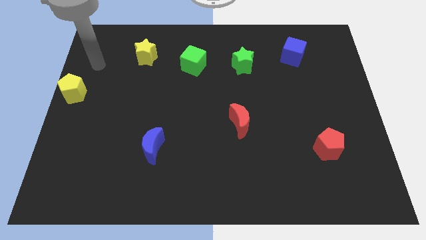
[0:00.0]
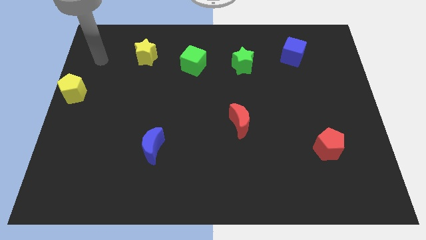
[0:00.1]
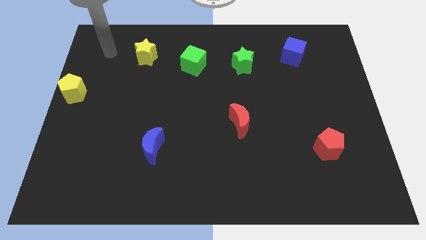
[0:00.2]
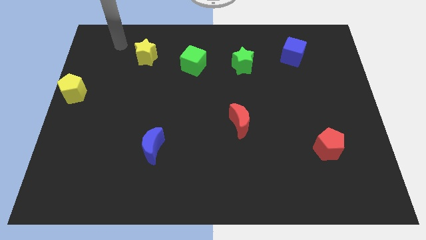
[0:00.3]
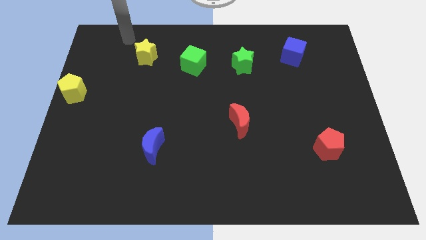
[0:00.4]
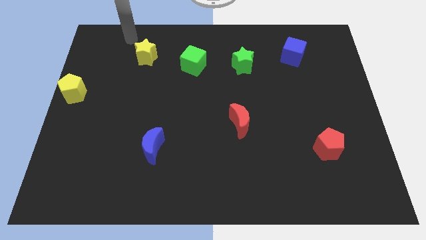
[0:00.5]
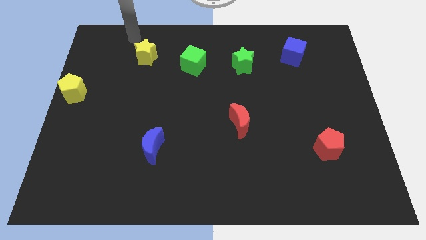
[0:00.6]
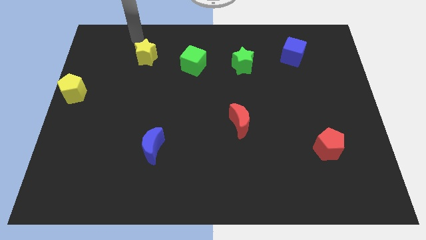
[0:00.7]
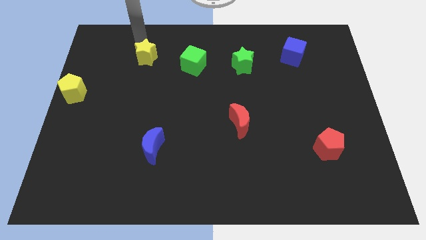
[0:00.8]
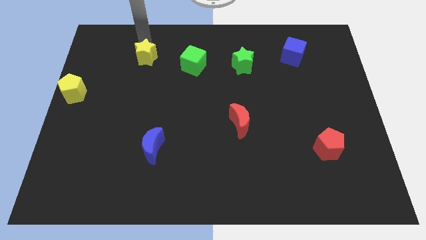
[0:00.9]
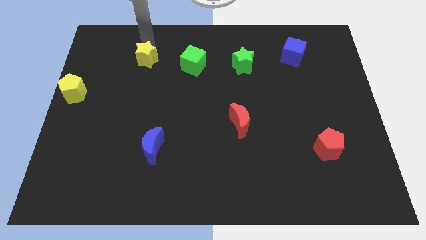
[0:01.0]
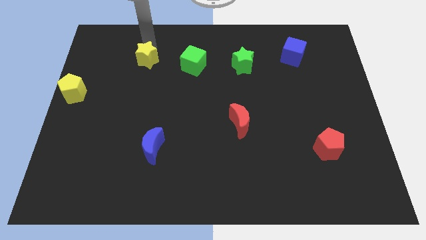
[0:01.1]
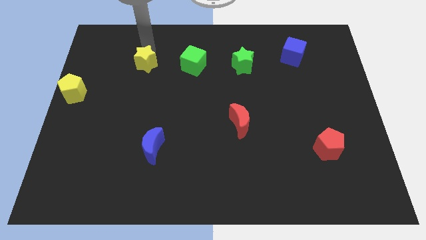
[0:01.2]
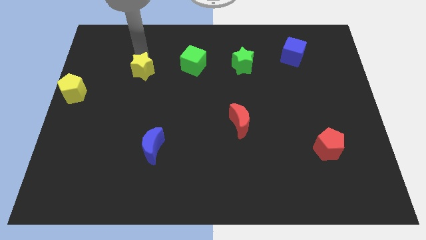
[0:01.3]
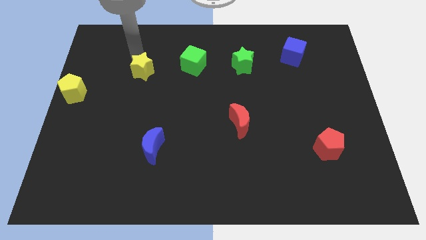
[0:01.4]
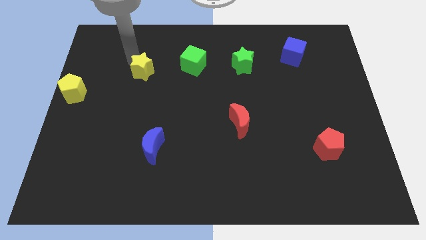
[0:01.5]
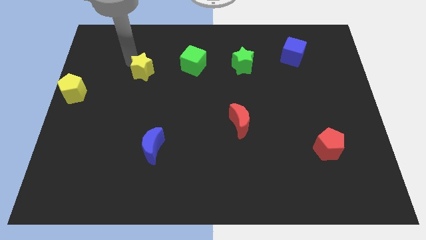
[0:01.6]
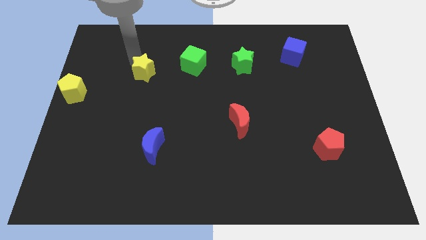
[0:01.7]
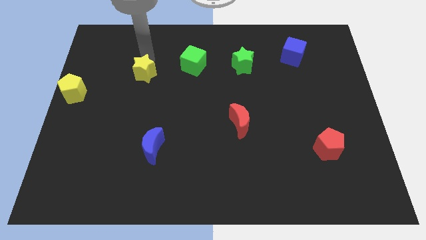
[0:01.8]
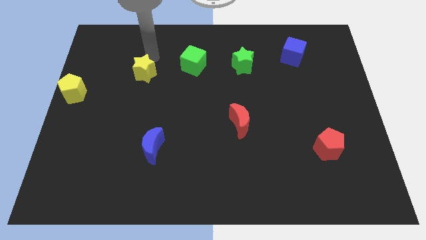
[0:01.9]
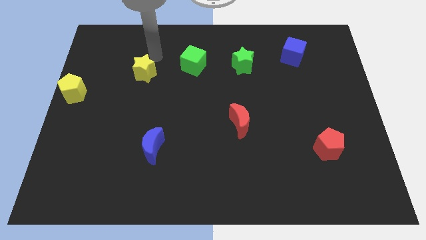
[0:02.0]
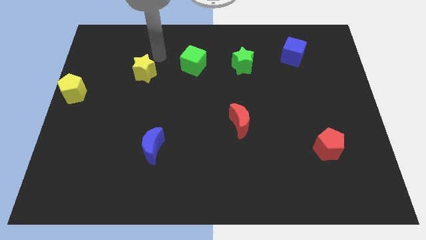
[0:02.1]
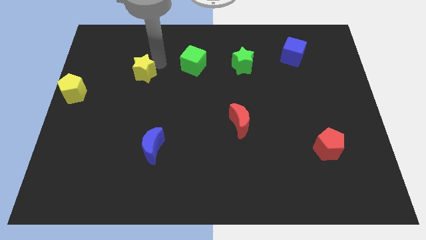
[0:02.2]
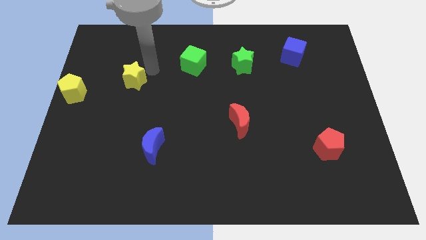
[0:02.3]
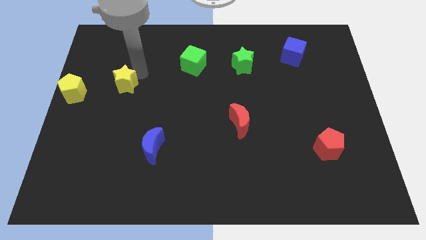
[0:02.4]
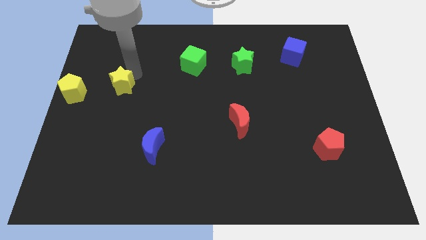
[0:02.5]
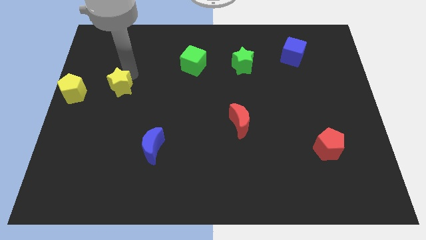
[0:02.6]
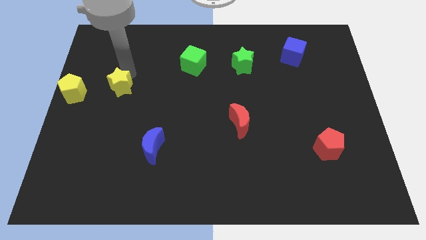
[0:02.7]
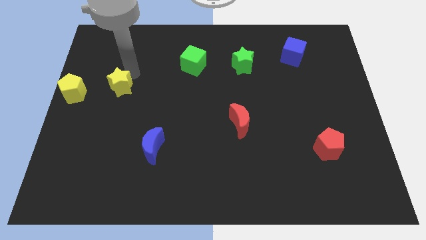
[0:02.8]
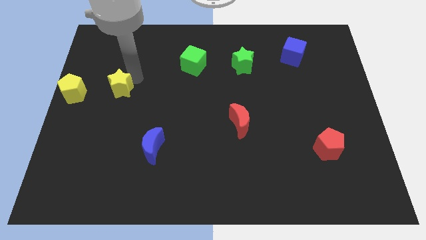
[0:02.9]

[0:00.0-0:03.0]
move the yellow star to the right of yellow pentagon

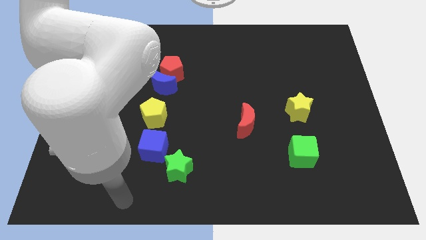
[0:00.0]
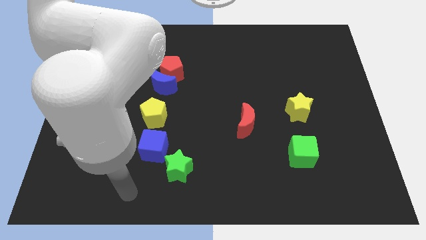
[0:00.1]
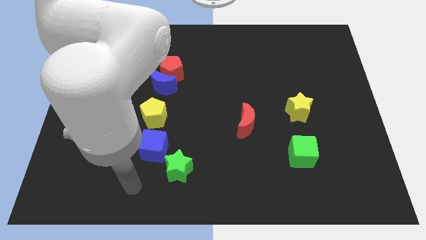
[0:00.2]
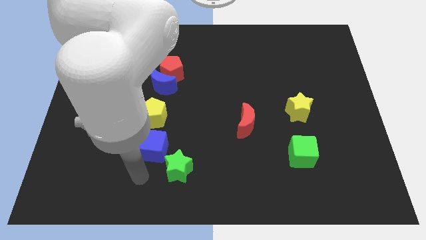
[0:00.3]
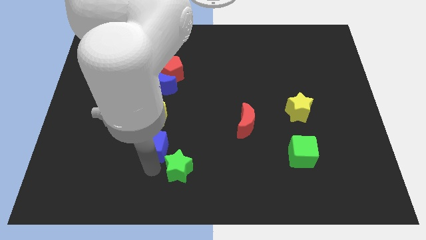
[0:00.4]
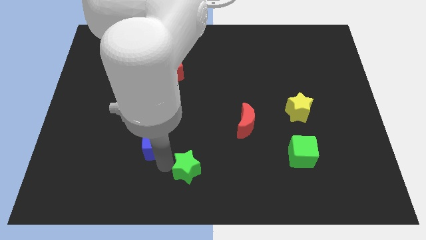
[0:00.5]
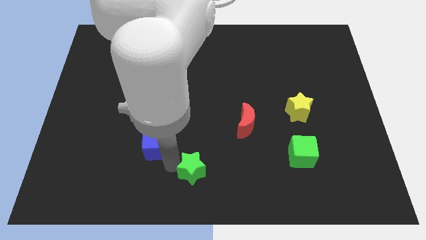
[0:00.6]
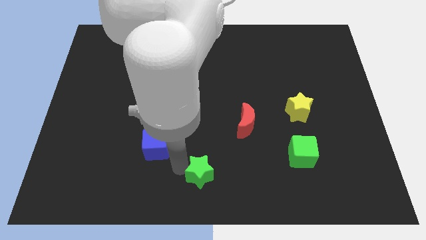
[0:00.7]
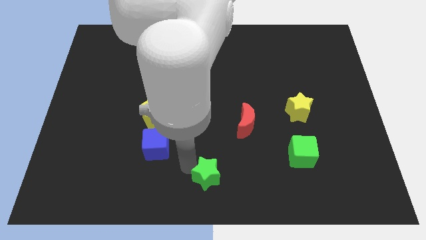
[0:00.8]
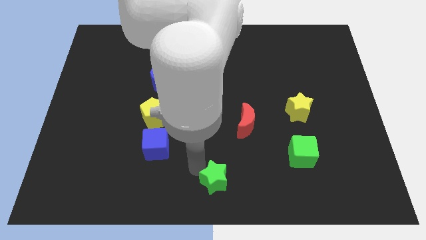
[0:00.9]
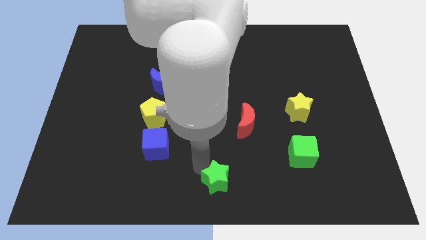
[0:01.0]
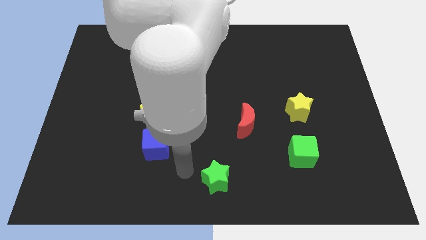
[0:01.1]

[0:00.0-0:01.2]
take the green star away from the blue cube

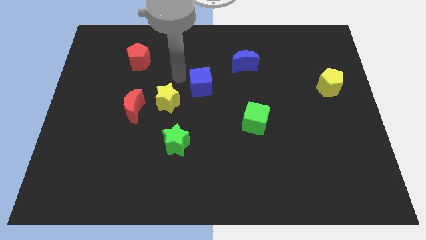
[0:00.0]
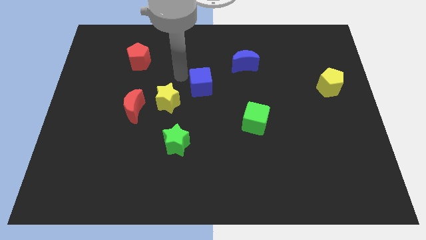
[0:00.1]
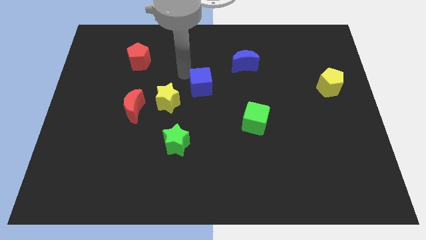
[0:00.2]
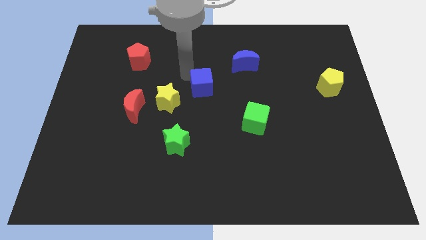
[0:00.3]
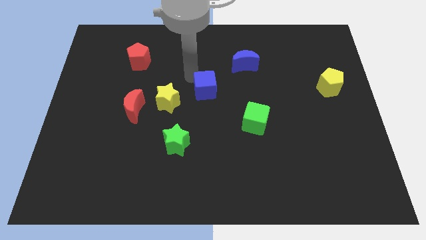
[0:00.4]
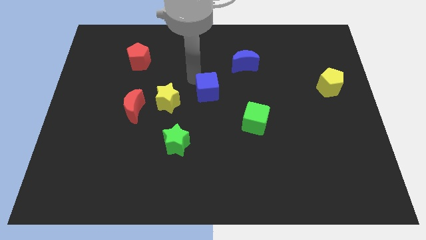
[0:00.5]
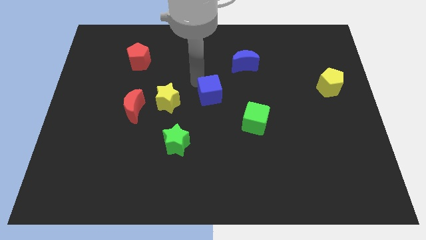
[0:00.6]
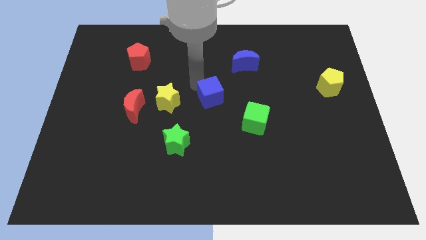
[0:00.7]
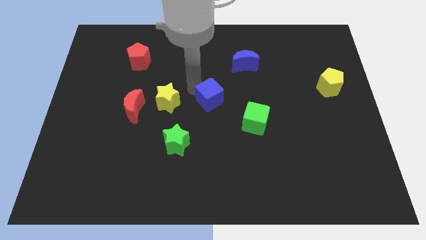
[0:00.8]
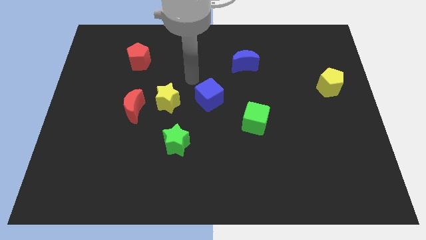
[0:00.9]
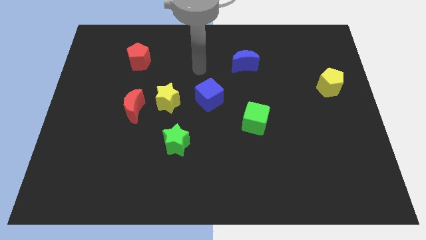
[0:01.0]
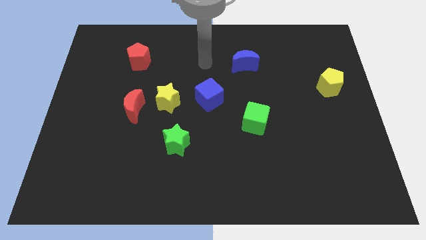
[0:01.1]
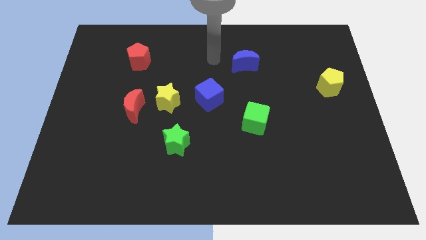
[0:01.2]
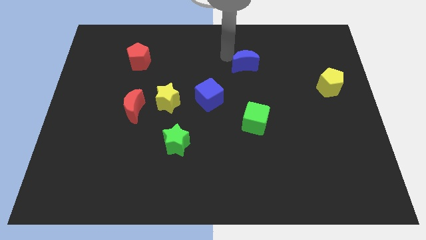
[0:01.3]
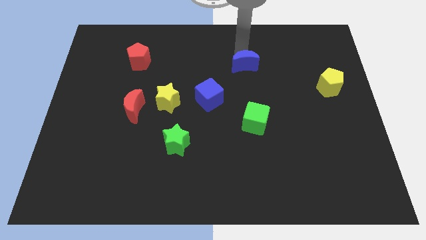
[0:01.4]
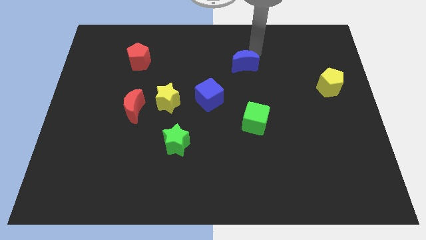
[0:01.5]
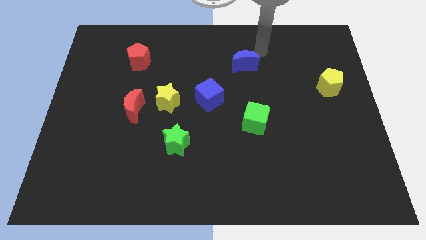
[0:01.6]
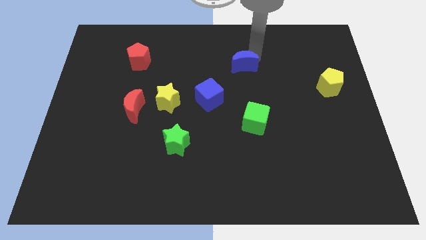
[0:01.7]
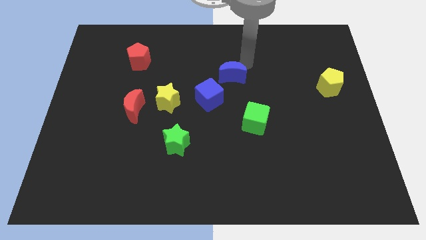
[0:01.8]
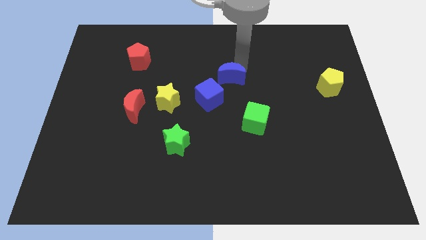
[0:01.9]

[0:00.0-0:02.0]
place the blue cube to the right of the yellow star

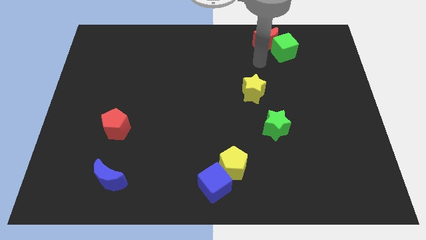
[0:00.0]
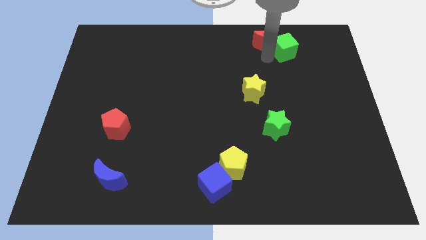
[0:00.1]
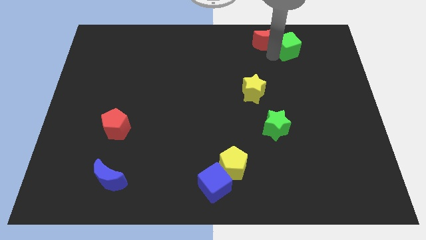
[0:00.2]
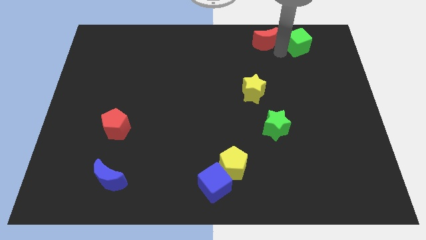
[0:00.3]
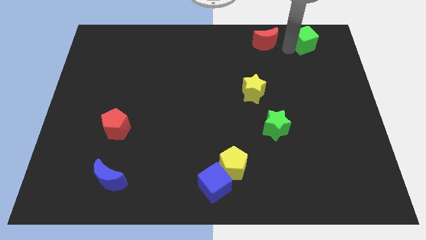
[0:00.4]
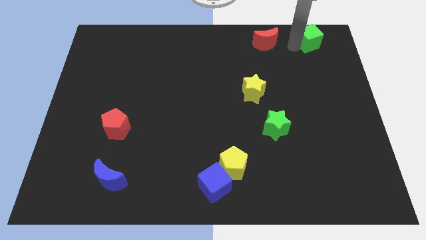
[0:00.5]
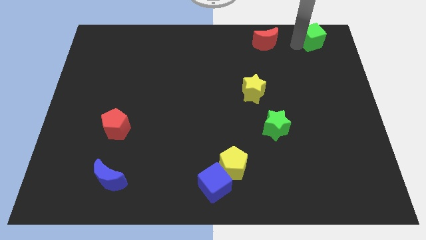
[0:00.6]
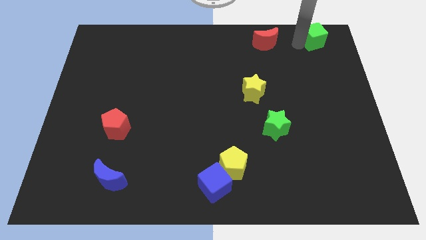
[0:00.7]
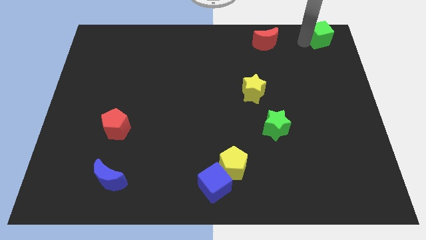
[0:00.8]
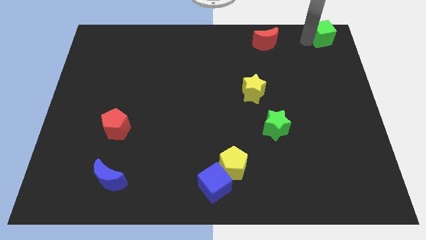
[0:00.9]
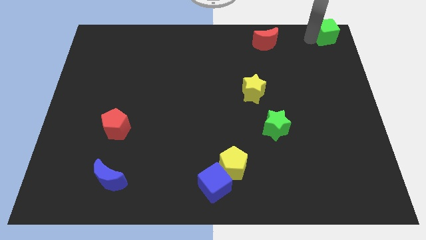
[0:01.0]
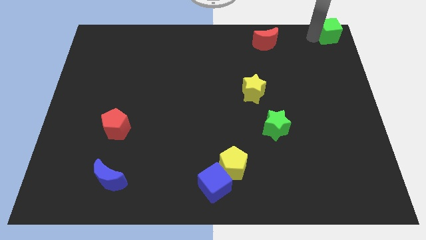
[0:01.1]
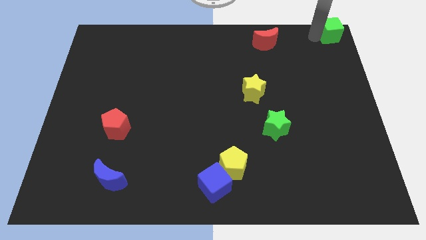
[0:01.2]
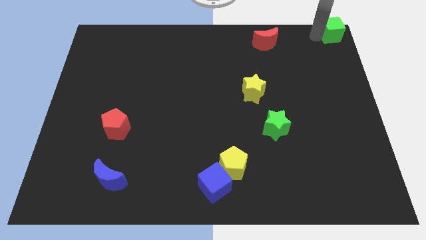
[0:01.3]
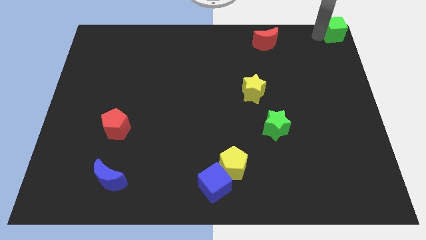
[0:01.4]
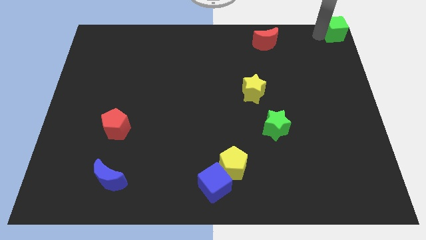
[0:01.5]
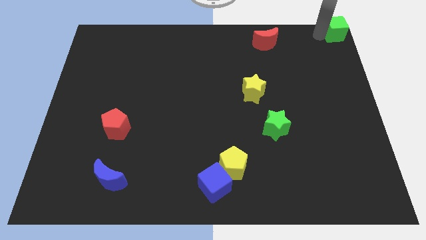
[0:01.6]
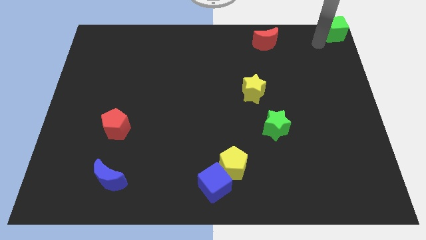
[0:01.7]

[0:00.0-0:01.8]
move the green cube to the top right corner of the board

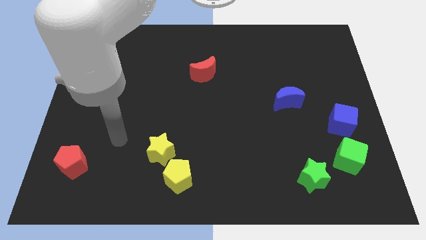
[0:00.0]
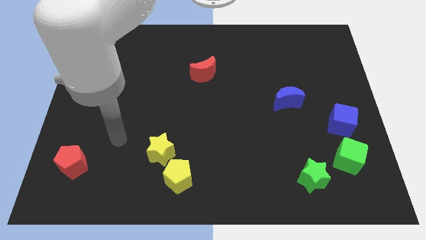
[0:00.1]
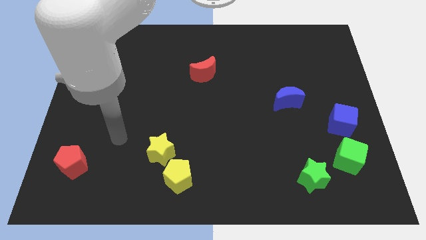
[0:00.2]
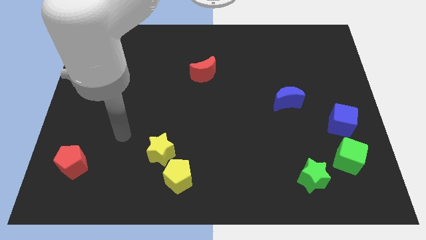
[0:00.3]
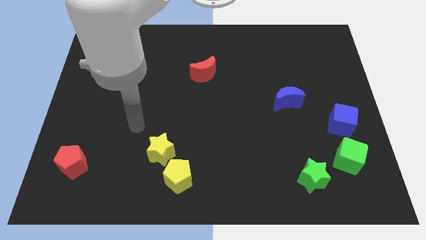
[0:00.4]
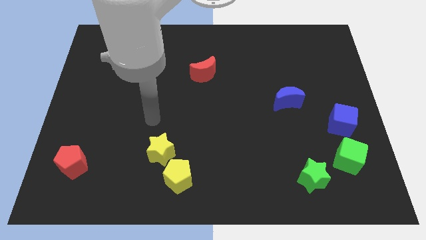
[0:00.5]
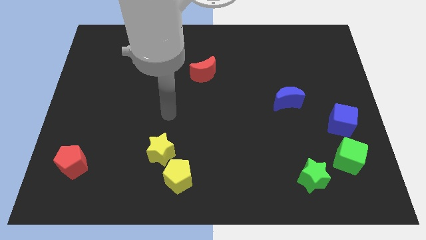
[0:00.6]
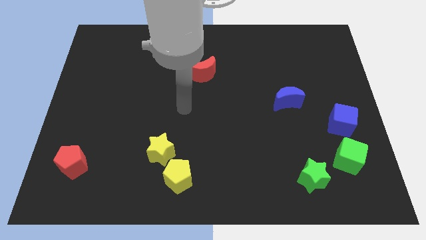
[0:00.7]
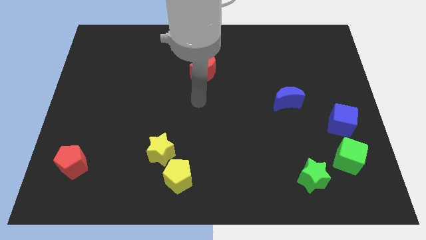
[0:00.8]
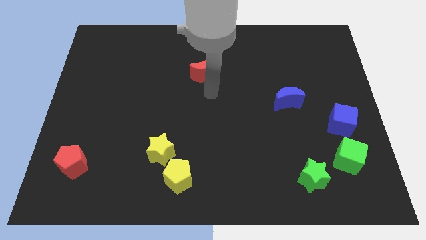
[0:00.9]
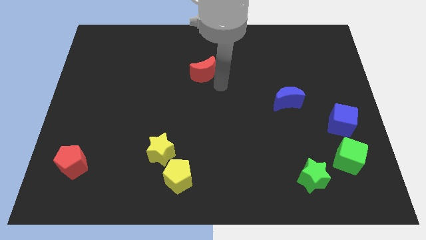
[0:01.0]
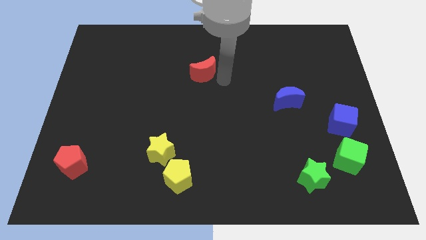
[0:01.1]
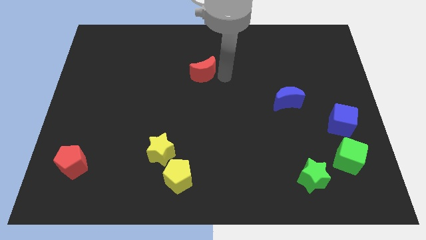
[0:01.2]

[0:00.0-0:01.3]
move your arm towards the red crescent
